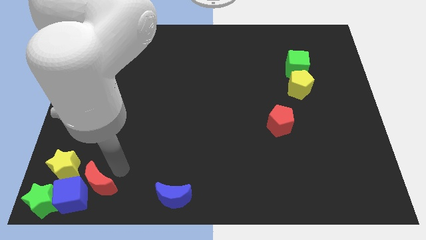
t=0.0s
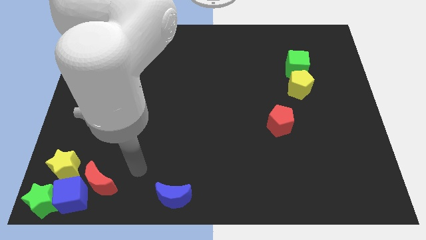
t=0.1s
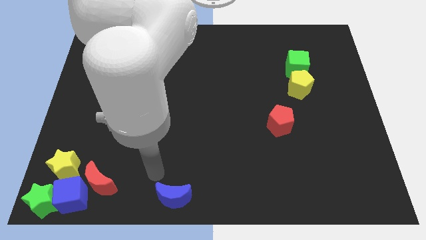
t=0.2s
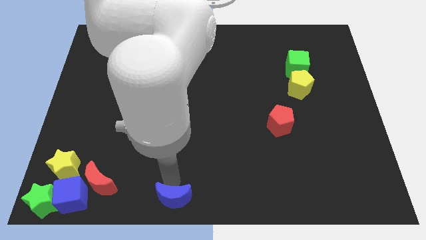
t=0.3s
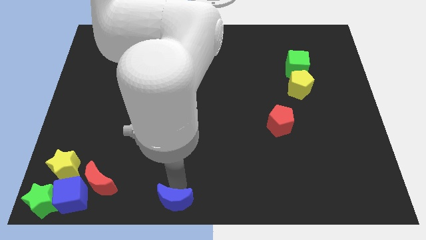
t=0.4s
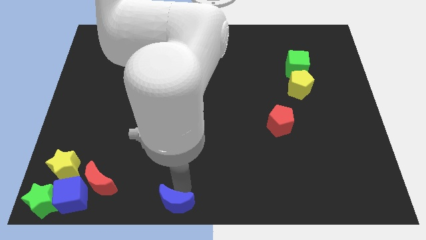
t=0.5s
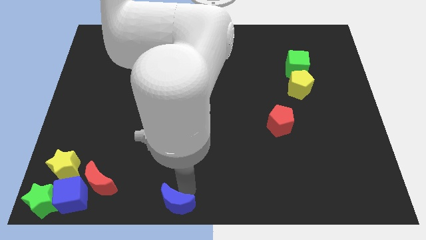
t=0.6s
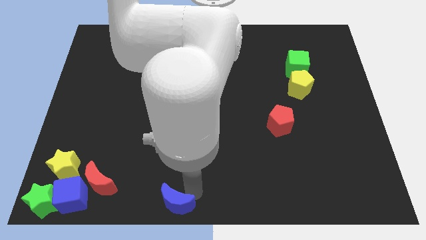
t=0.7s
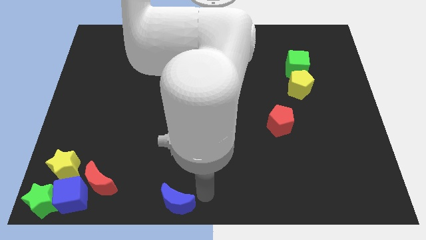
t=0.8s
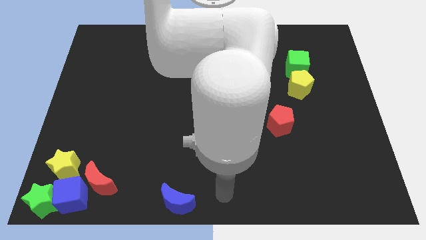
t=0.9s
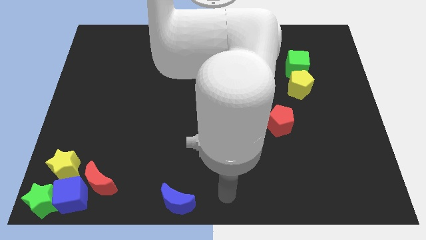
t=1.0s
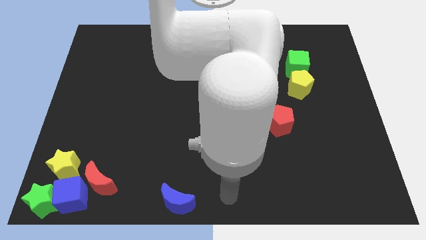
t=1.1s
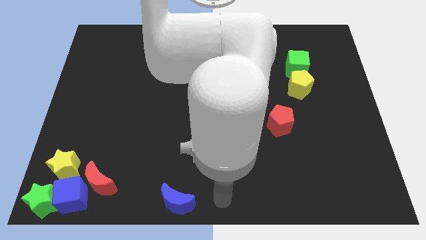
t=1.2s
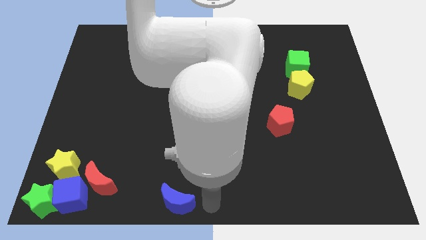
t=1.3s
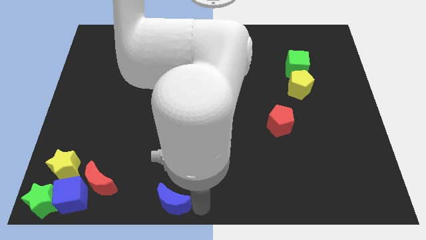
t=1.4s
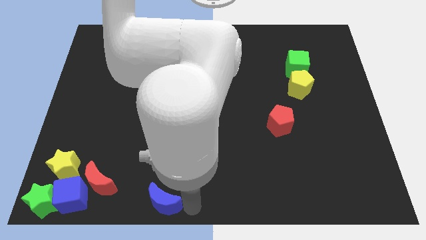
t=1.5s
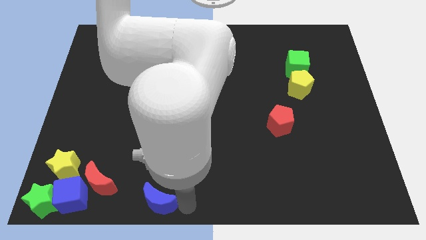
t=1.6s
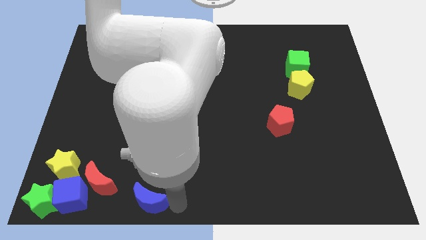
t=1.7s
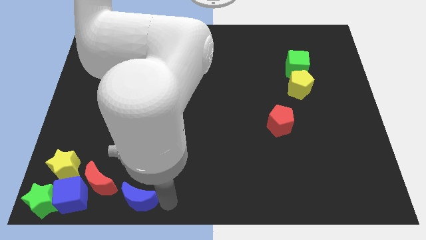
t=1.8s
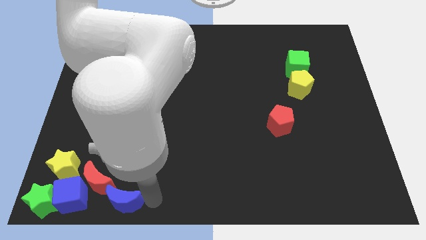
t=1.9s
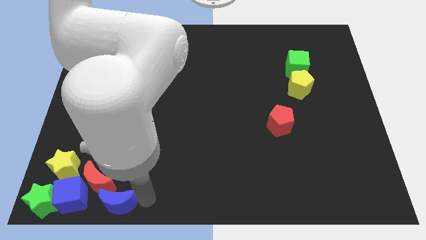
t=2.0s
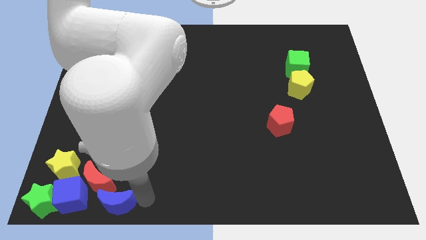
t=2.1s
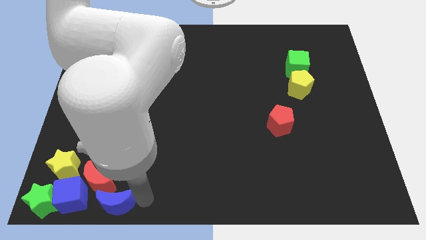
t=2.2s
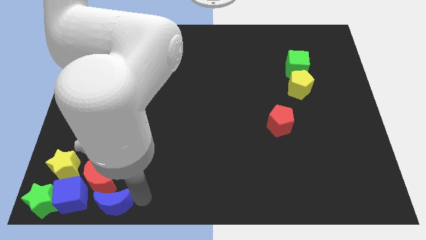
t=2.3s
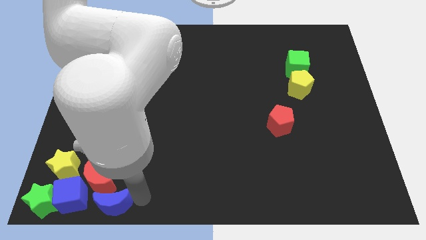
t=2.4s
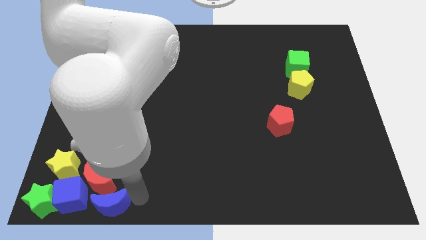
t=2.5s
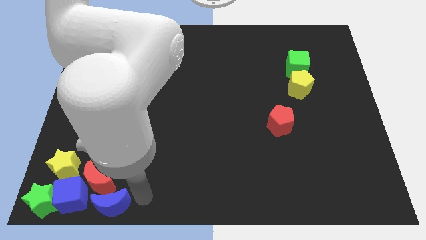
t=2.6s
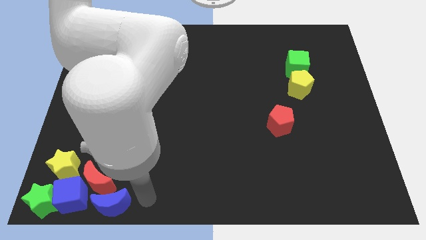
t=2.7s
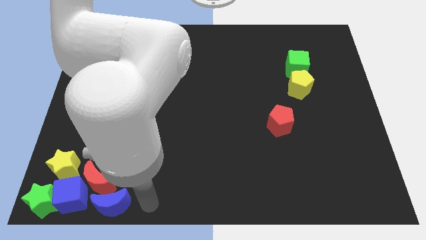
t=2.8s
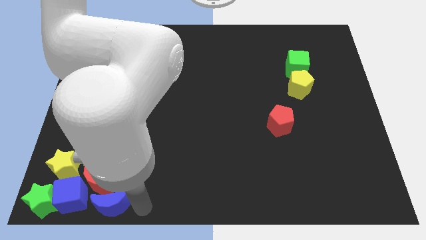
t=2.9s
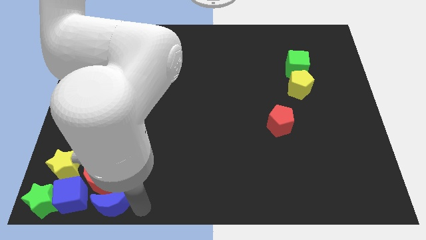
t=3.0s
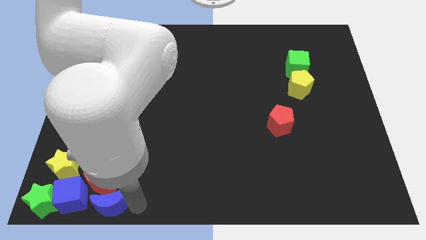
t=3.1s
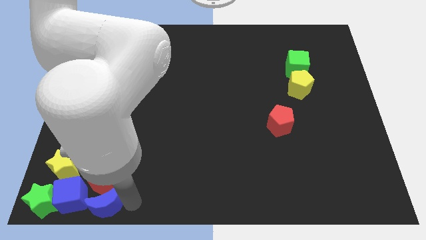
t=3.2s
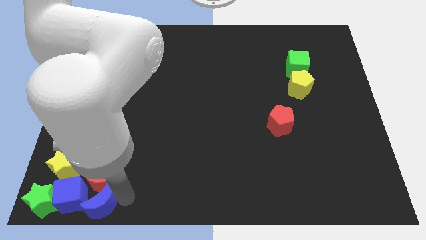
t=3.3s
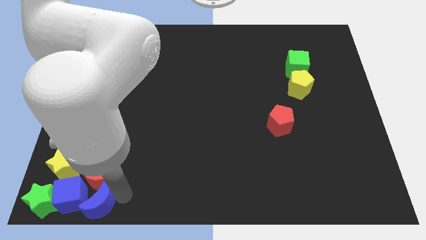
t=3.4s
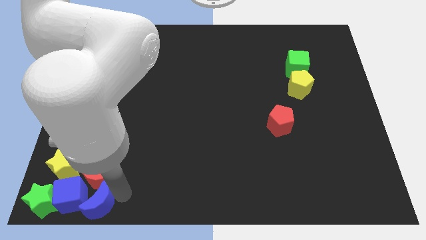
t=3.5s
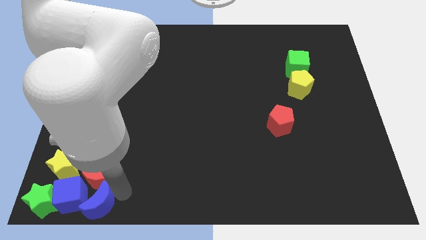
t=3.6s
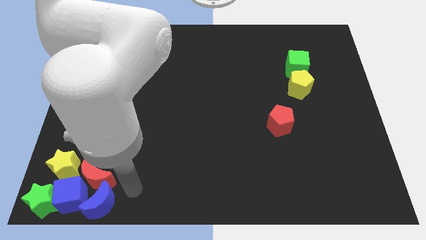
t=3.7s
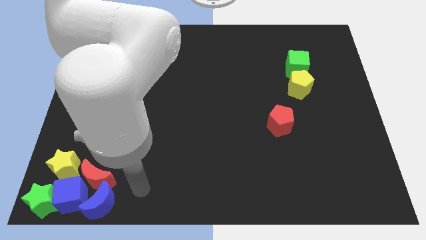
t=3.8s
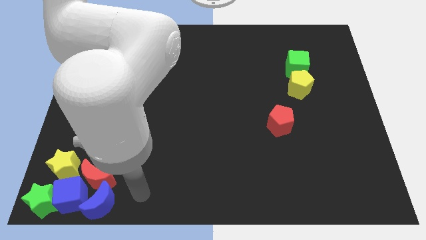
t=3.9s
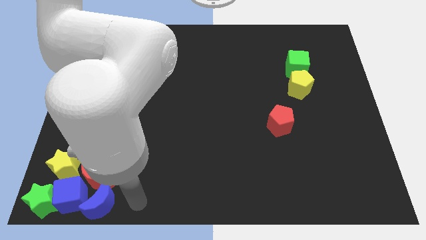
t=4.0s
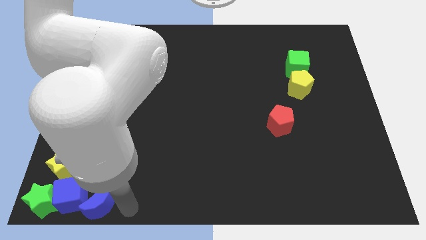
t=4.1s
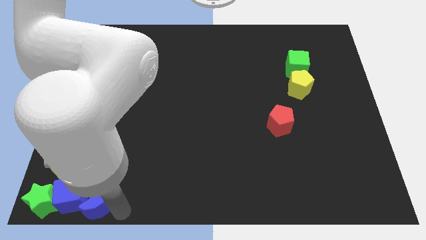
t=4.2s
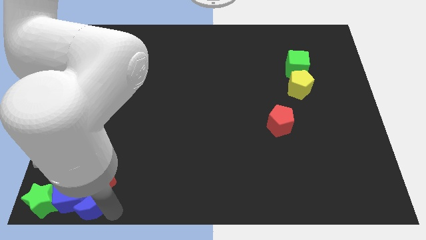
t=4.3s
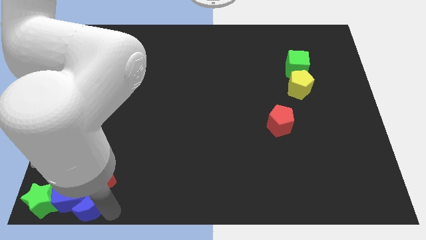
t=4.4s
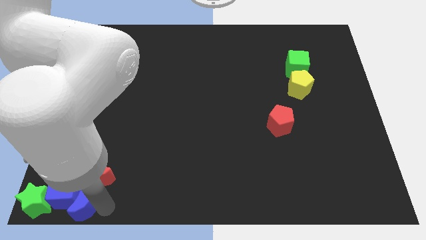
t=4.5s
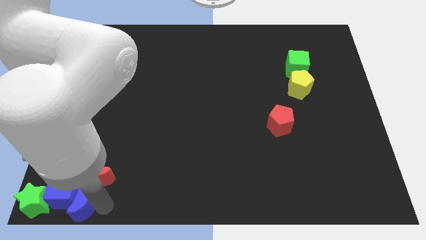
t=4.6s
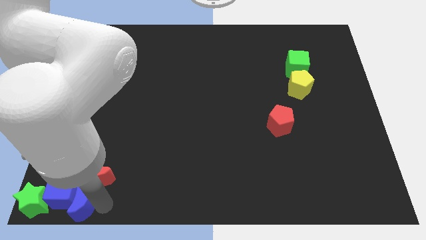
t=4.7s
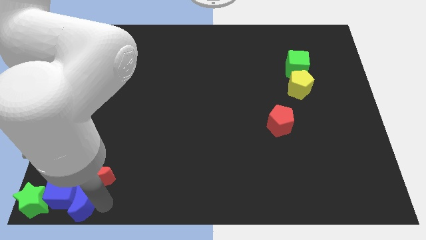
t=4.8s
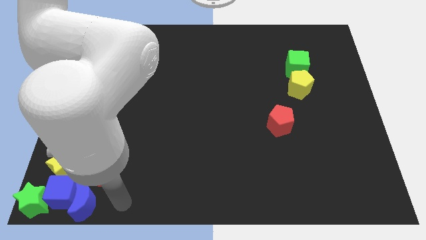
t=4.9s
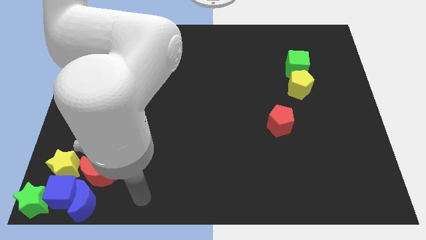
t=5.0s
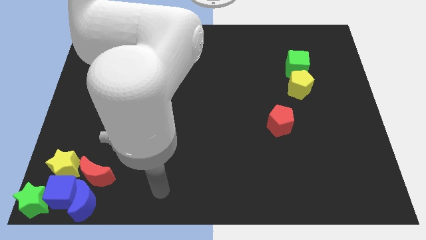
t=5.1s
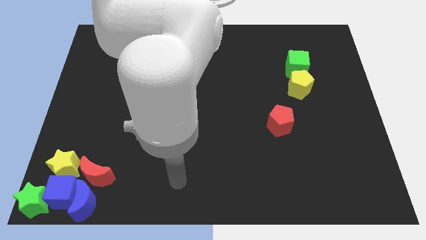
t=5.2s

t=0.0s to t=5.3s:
push the blue crescent into the blue cube

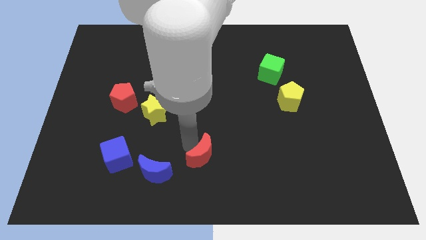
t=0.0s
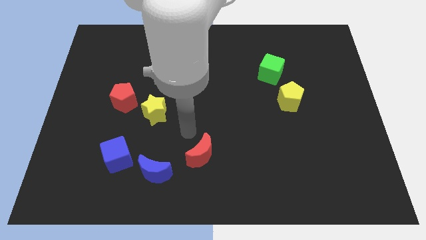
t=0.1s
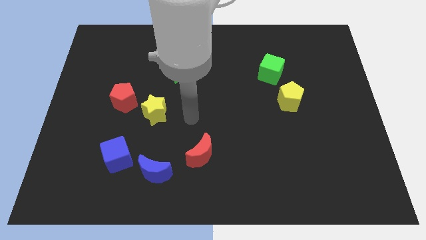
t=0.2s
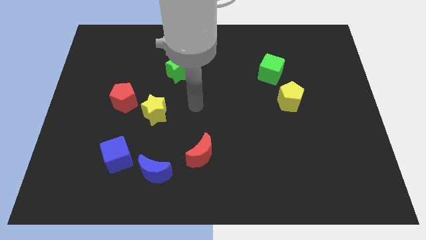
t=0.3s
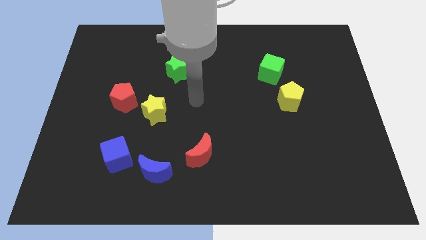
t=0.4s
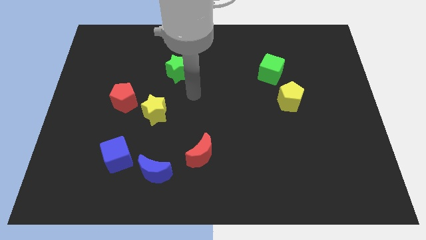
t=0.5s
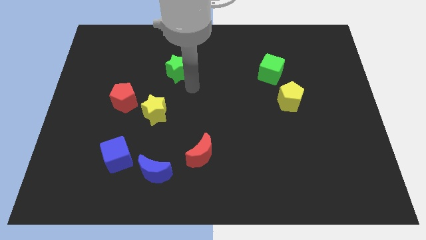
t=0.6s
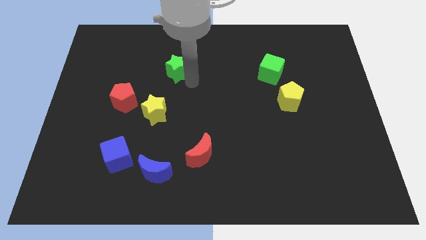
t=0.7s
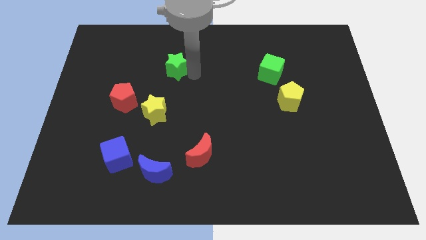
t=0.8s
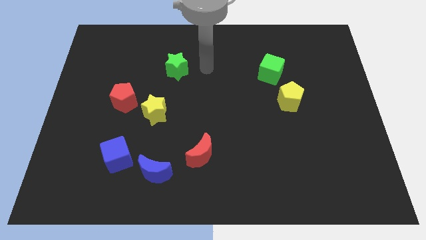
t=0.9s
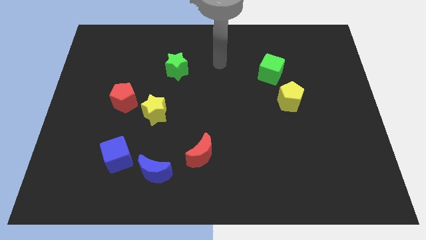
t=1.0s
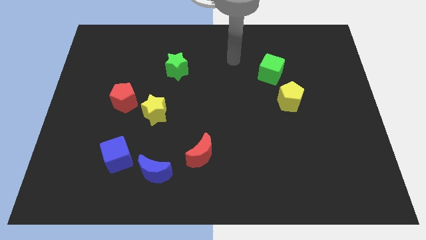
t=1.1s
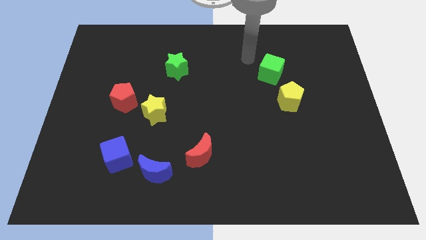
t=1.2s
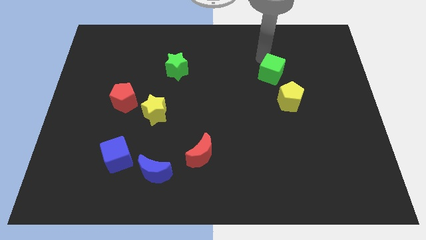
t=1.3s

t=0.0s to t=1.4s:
place your arm to the top left side of the green cube

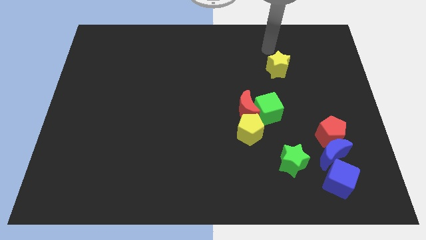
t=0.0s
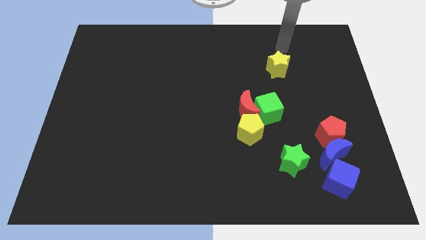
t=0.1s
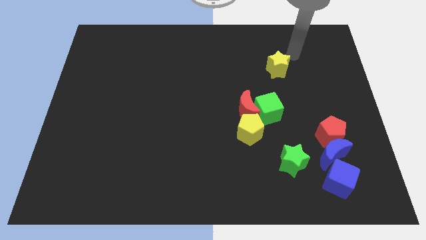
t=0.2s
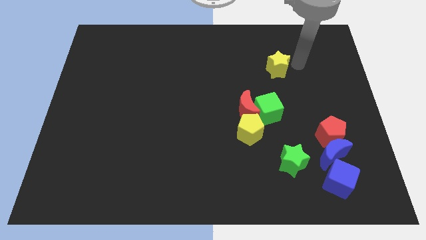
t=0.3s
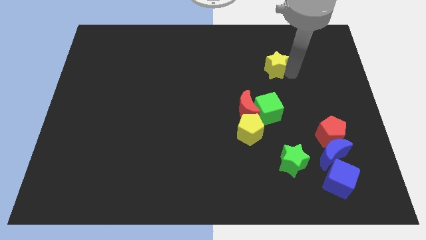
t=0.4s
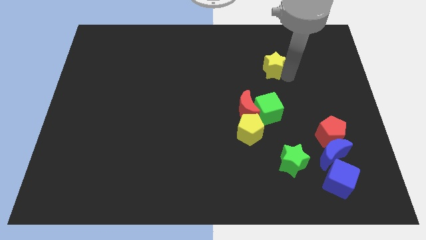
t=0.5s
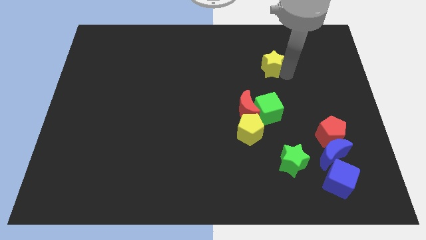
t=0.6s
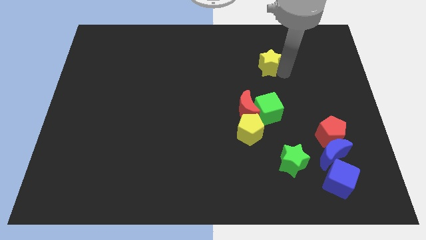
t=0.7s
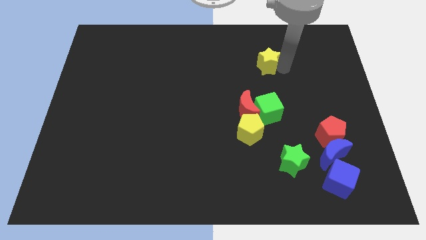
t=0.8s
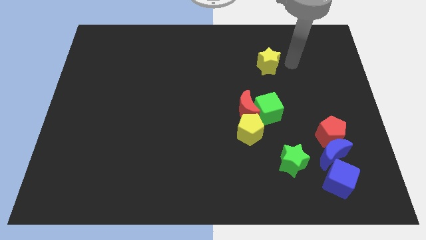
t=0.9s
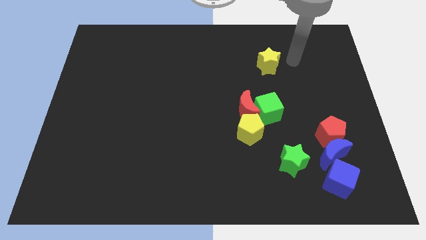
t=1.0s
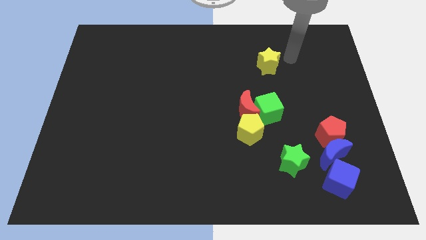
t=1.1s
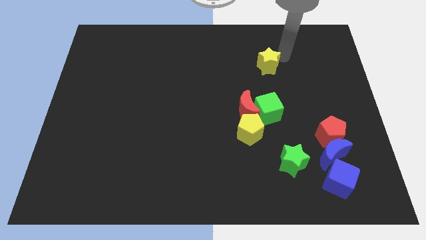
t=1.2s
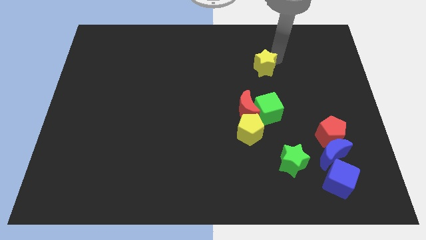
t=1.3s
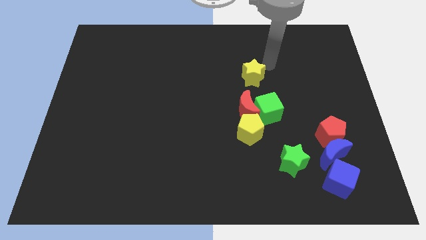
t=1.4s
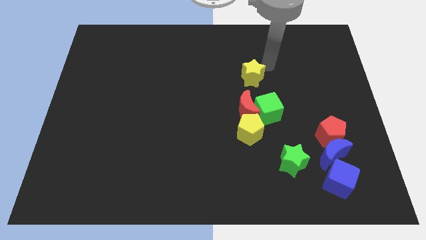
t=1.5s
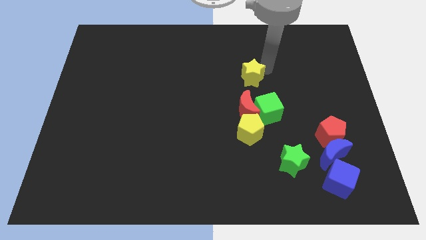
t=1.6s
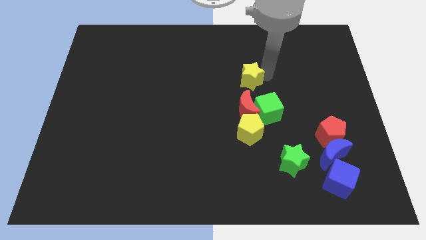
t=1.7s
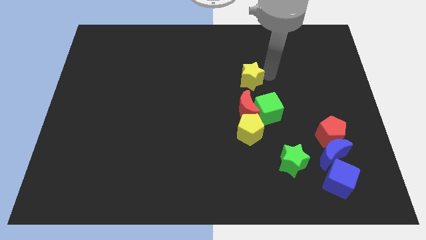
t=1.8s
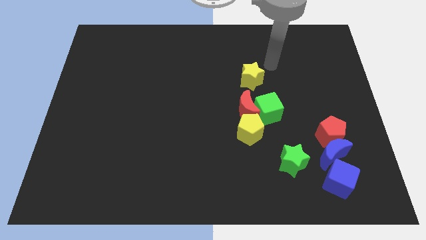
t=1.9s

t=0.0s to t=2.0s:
move yellow star to the top of red moon

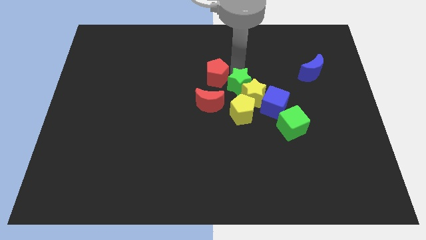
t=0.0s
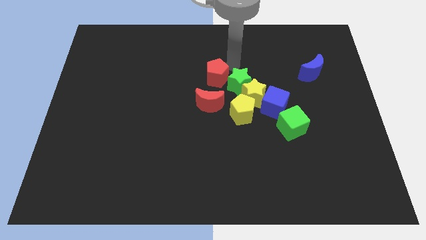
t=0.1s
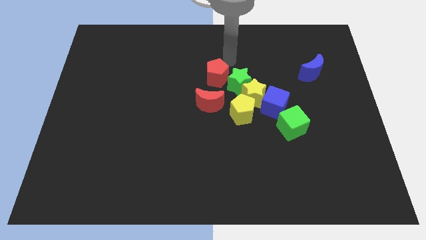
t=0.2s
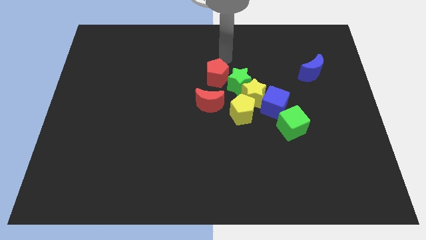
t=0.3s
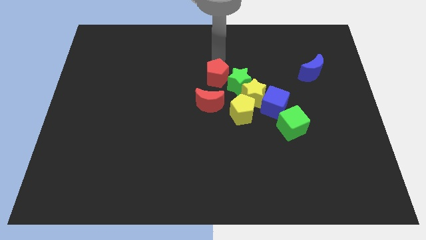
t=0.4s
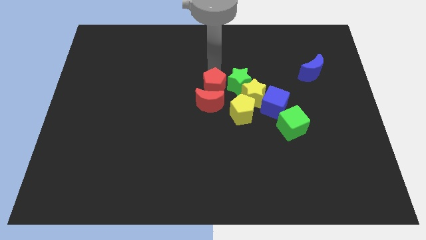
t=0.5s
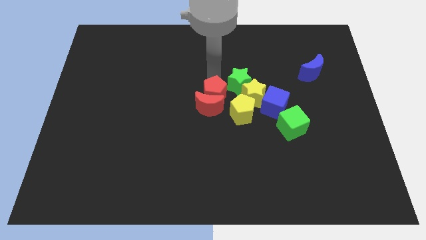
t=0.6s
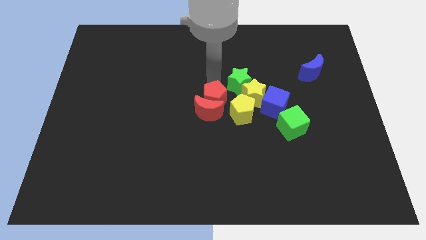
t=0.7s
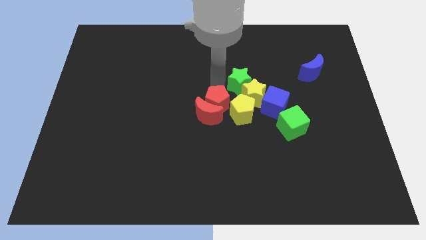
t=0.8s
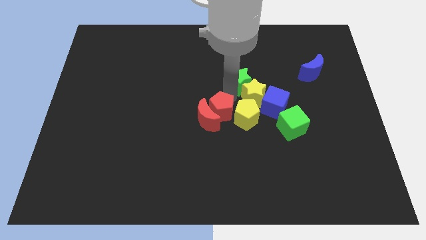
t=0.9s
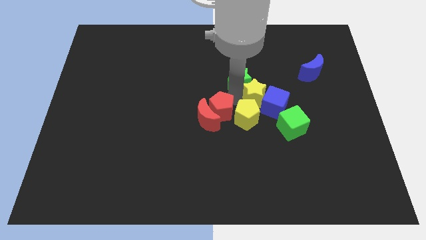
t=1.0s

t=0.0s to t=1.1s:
push the red pentagon into red crescent
